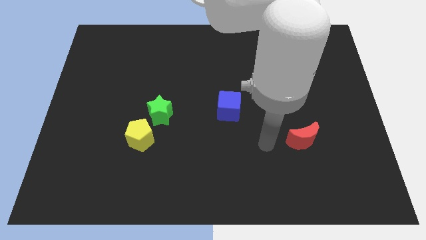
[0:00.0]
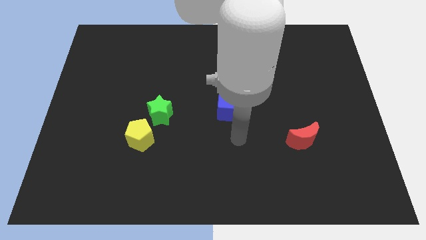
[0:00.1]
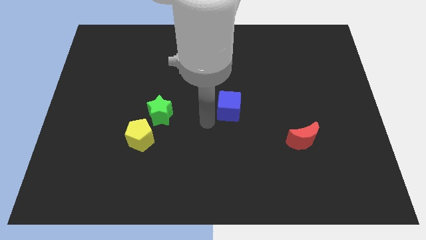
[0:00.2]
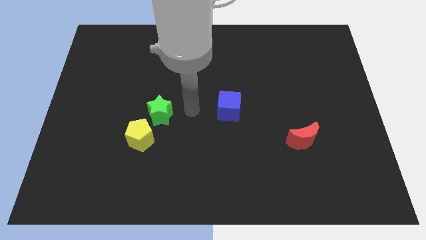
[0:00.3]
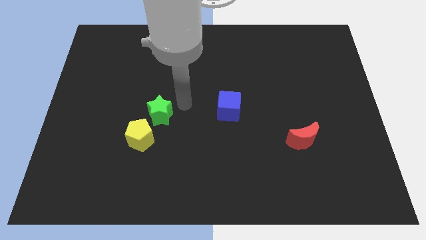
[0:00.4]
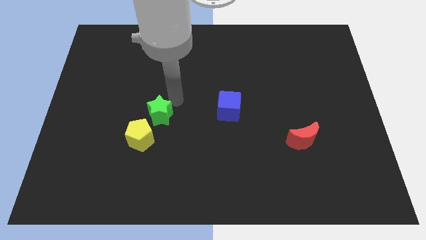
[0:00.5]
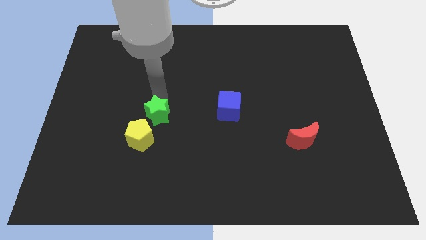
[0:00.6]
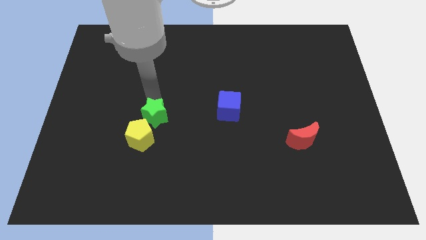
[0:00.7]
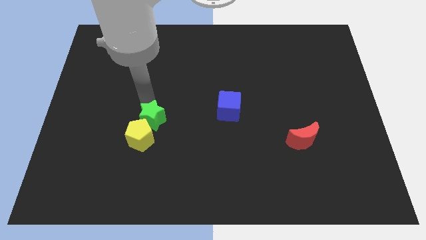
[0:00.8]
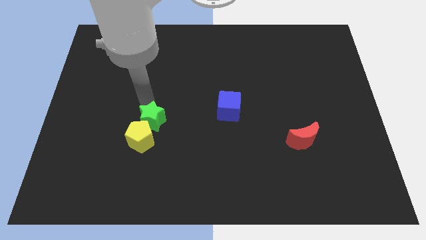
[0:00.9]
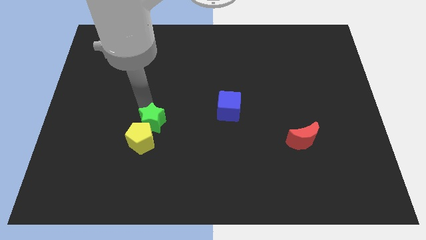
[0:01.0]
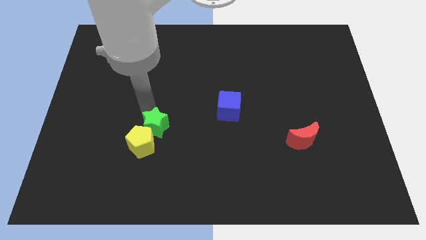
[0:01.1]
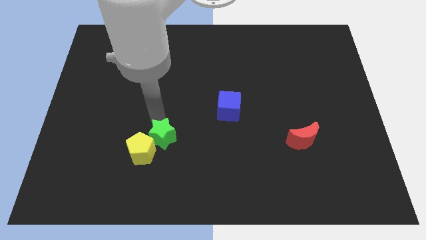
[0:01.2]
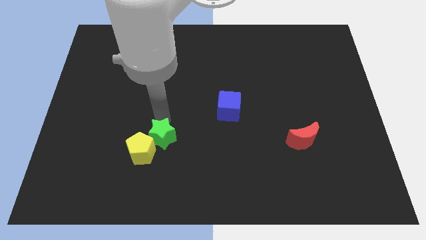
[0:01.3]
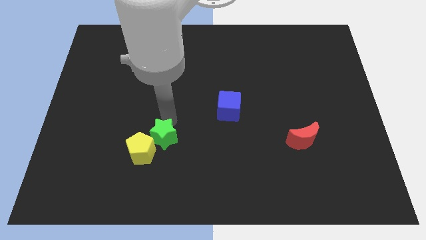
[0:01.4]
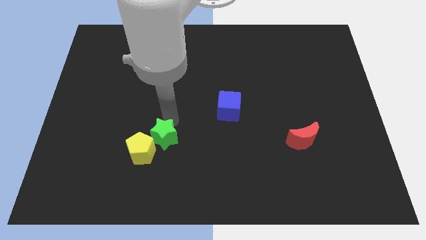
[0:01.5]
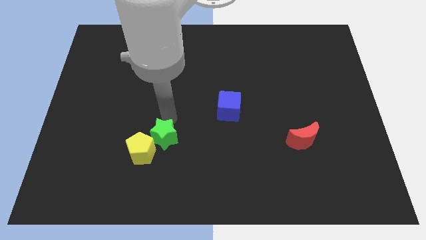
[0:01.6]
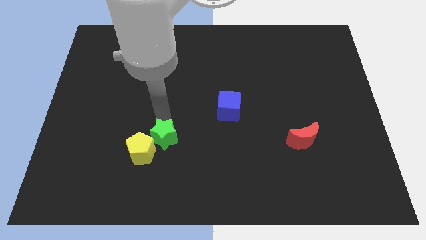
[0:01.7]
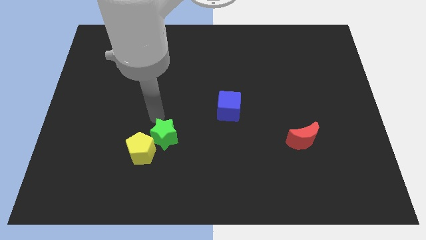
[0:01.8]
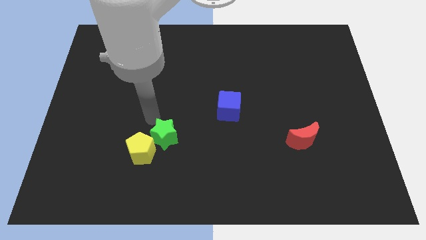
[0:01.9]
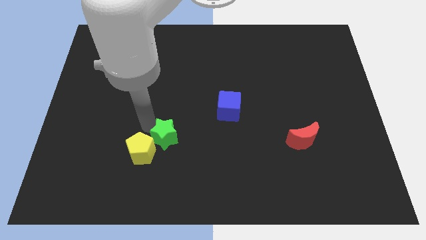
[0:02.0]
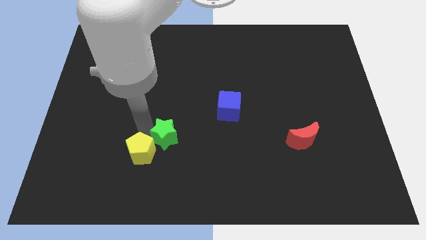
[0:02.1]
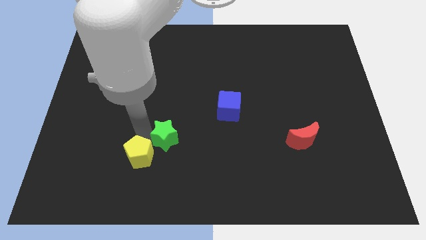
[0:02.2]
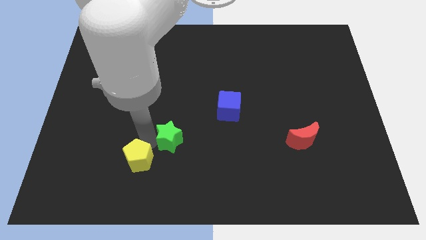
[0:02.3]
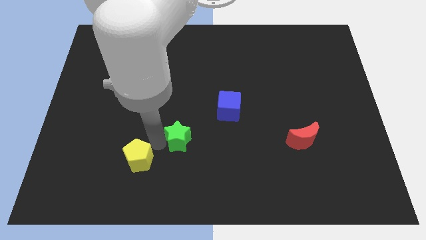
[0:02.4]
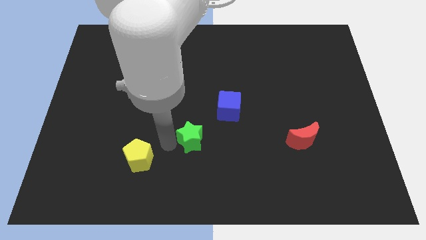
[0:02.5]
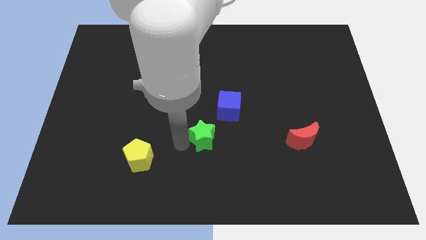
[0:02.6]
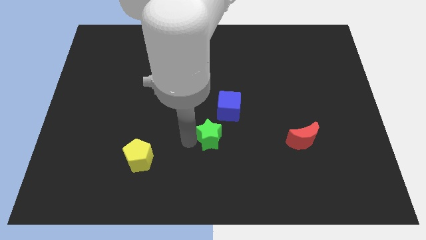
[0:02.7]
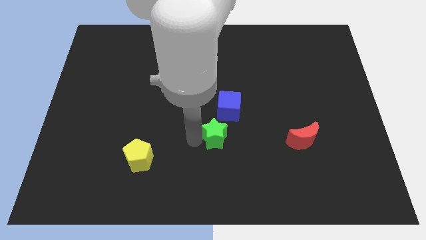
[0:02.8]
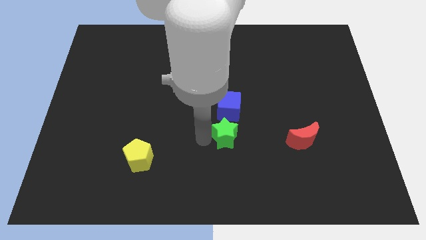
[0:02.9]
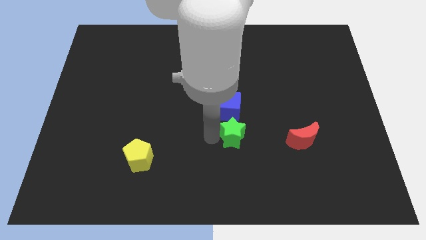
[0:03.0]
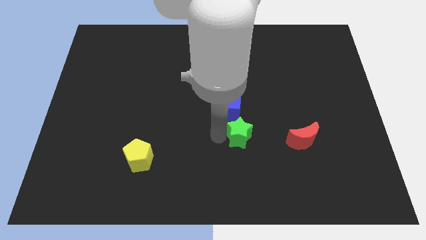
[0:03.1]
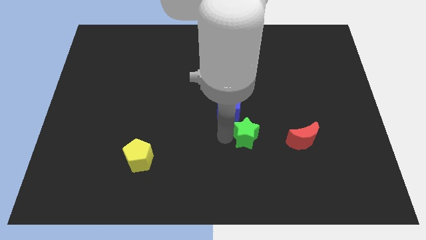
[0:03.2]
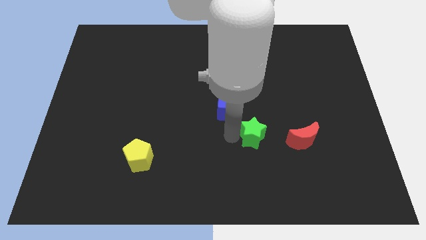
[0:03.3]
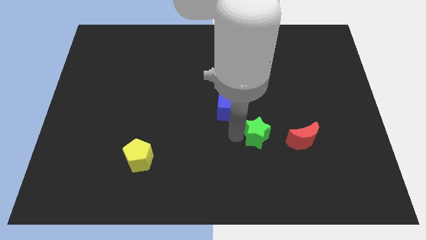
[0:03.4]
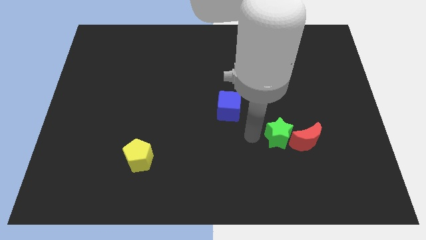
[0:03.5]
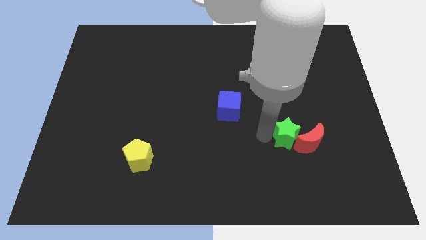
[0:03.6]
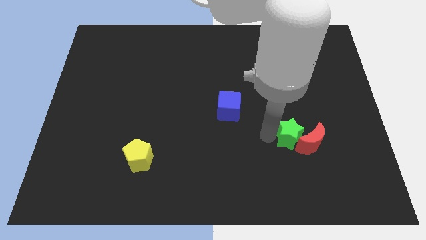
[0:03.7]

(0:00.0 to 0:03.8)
push the star next to the moon

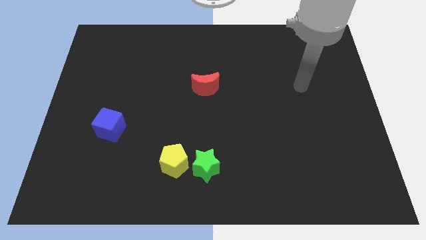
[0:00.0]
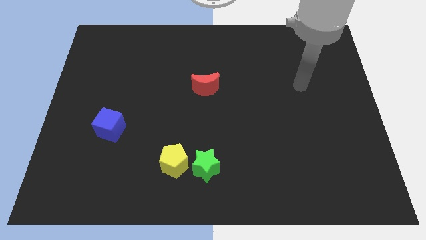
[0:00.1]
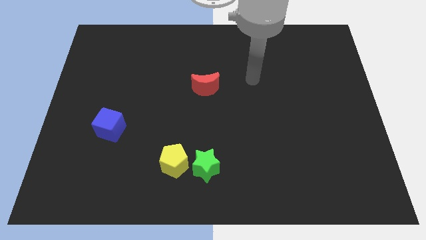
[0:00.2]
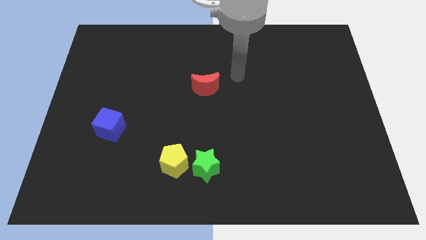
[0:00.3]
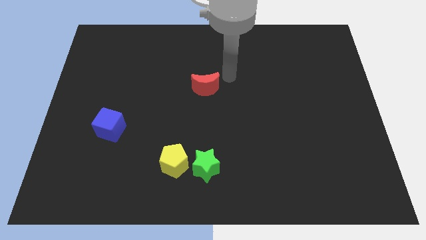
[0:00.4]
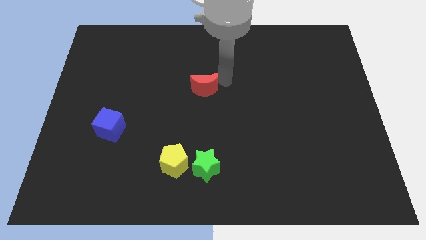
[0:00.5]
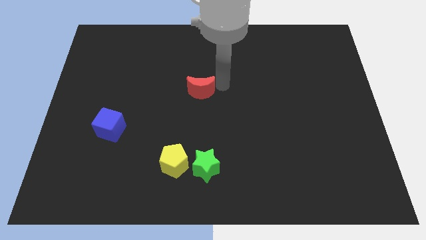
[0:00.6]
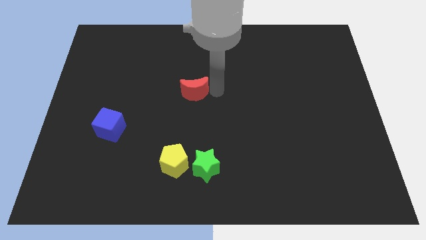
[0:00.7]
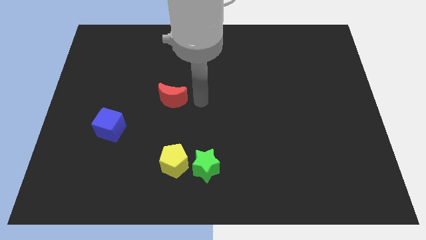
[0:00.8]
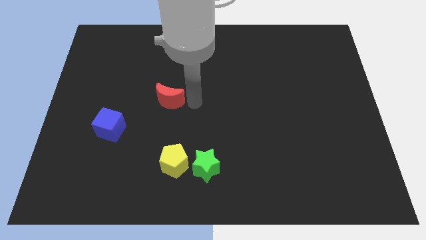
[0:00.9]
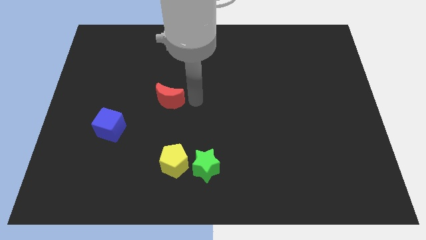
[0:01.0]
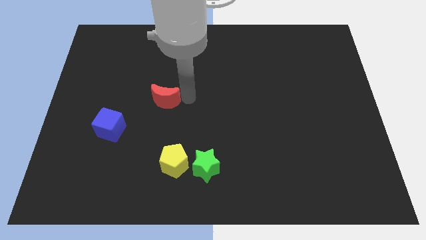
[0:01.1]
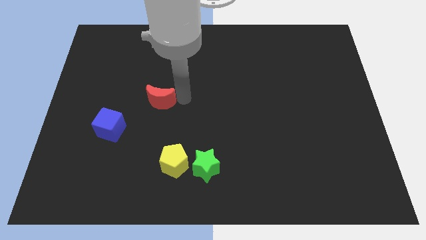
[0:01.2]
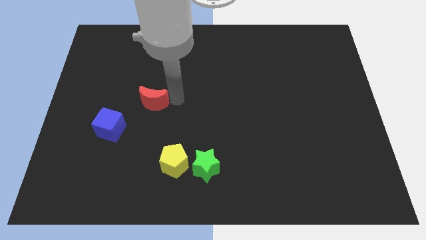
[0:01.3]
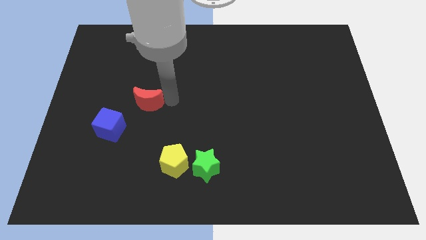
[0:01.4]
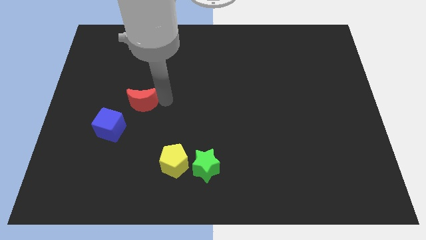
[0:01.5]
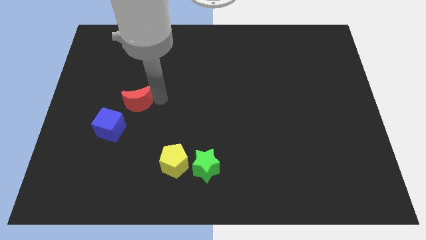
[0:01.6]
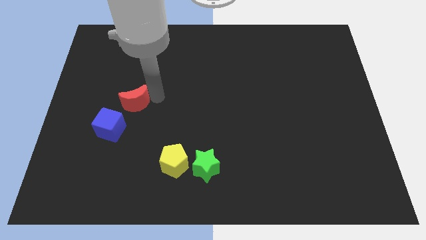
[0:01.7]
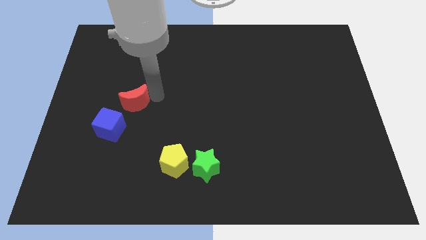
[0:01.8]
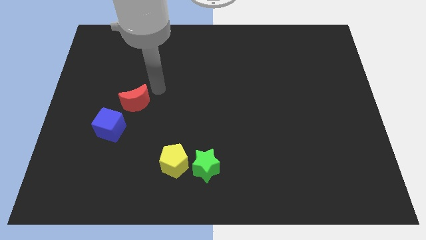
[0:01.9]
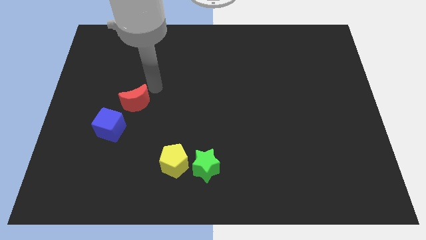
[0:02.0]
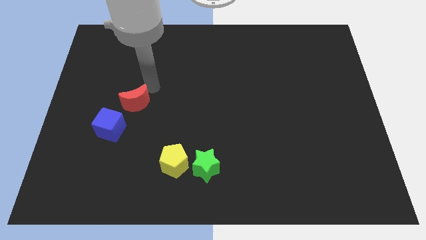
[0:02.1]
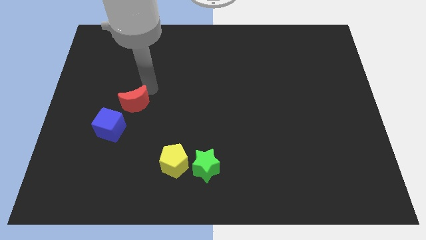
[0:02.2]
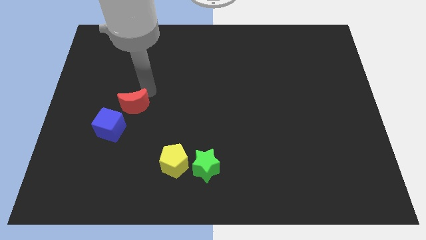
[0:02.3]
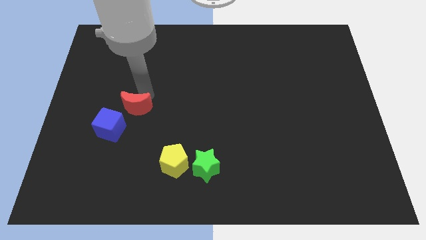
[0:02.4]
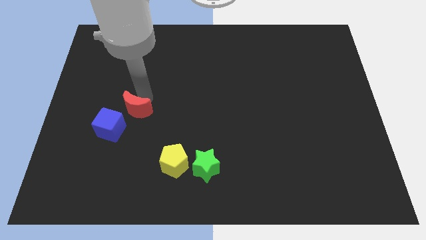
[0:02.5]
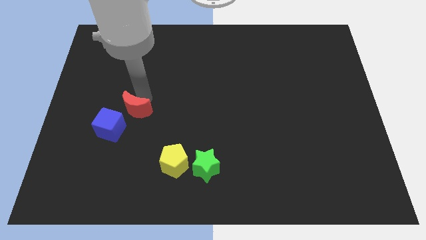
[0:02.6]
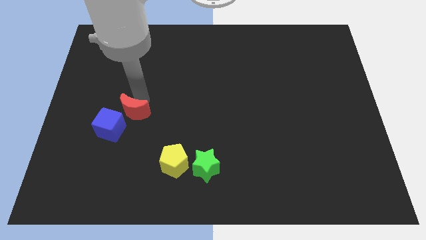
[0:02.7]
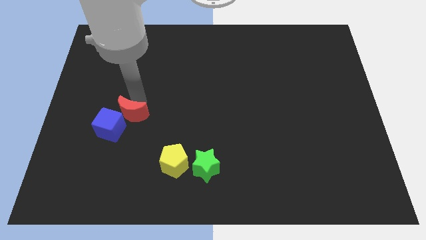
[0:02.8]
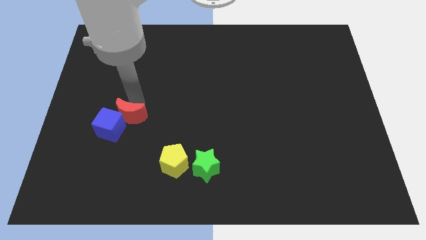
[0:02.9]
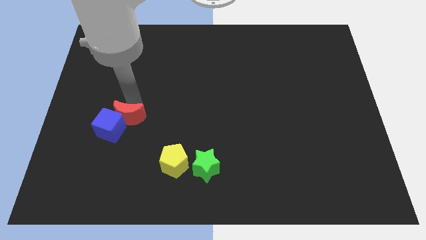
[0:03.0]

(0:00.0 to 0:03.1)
put the red moon next to the blue block

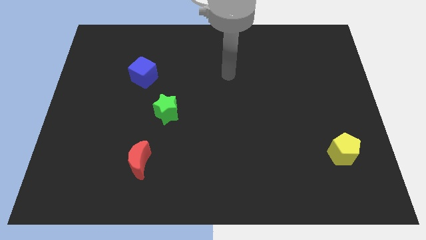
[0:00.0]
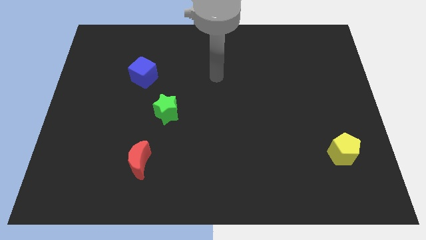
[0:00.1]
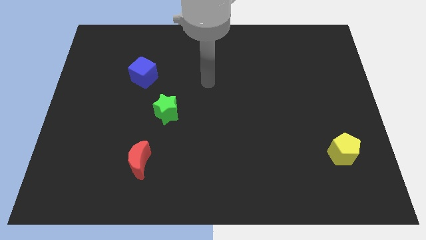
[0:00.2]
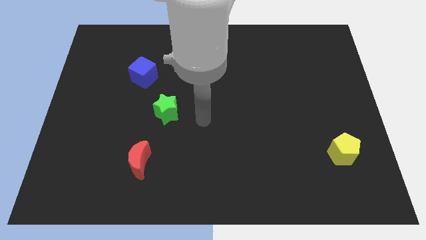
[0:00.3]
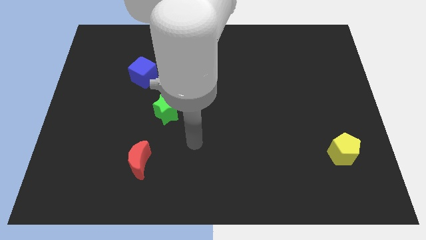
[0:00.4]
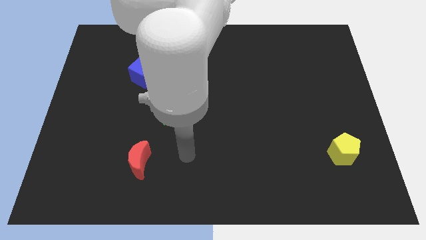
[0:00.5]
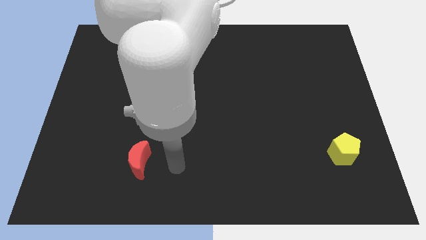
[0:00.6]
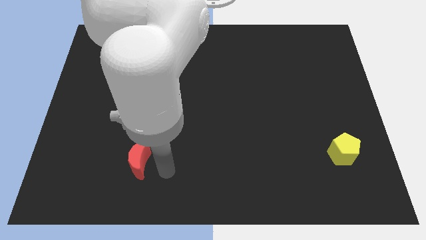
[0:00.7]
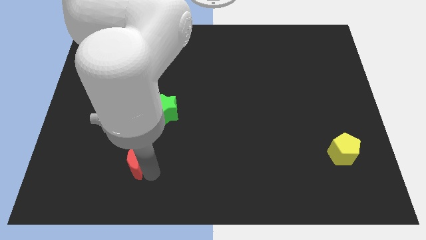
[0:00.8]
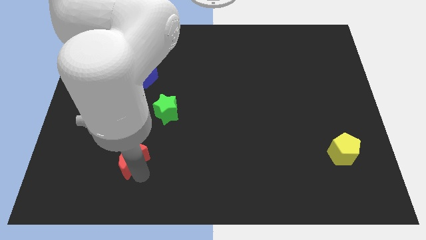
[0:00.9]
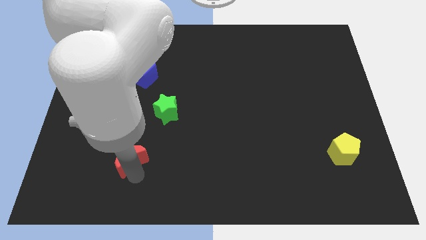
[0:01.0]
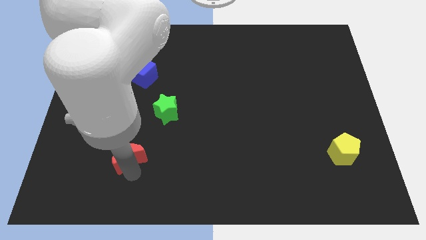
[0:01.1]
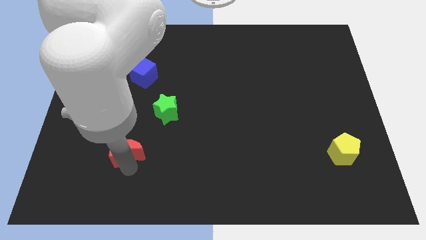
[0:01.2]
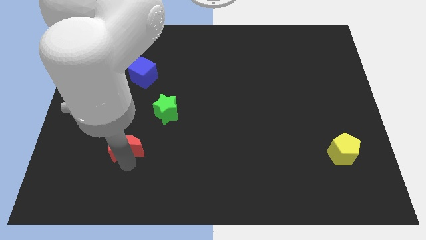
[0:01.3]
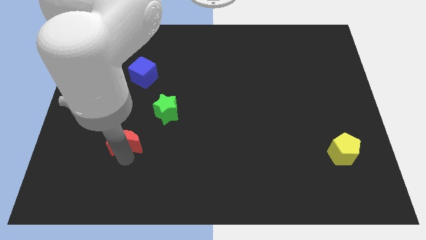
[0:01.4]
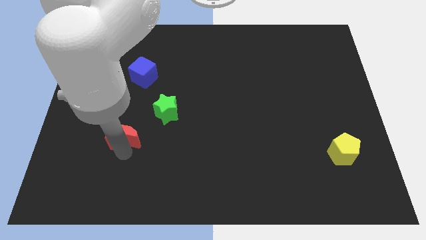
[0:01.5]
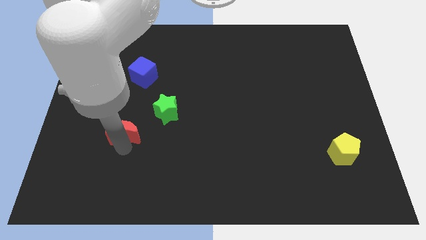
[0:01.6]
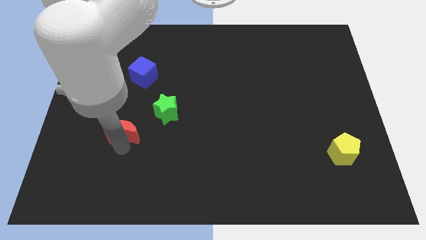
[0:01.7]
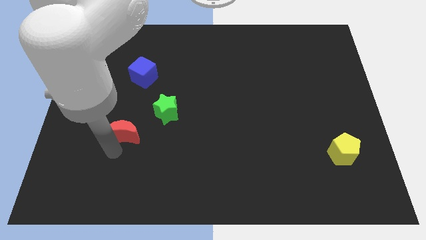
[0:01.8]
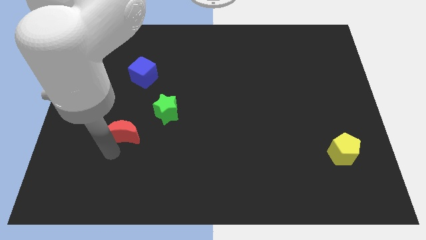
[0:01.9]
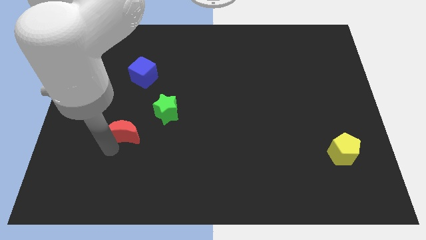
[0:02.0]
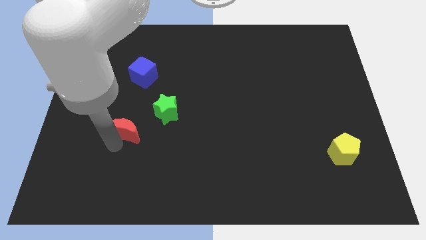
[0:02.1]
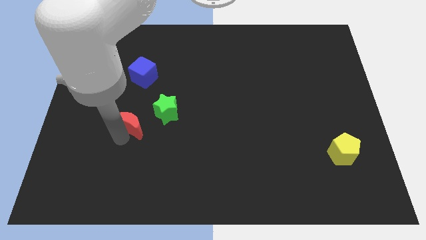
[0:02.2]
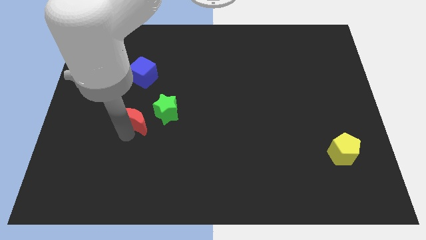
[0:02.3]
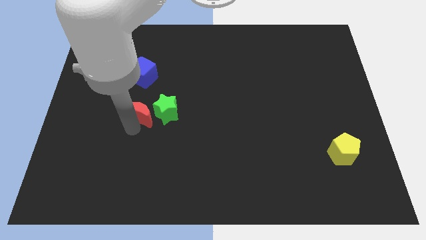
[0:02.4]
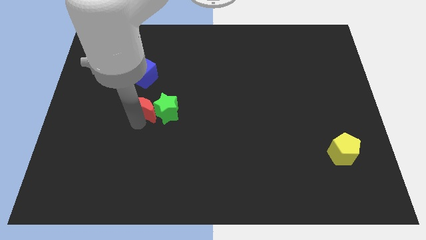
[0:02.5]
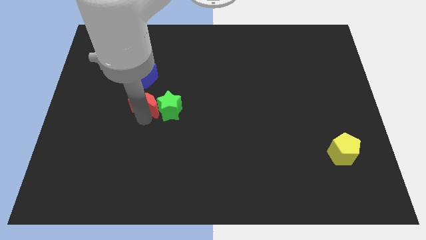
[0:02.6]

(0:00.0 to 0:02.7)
move the moon next to the green star
